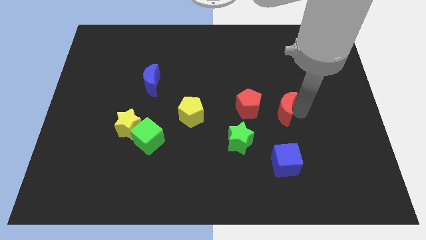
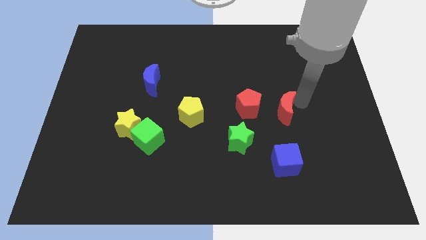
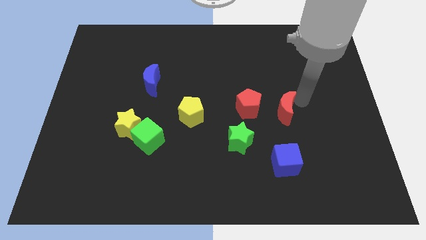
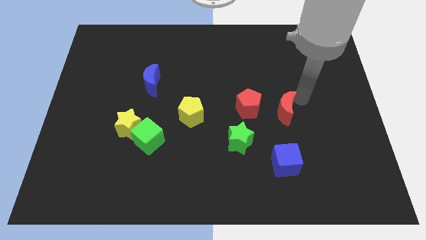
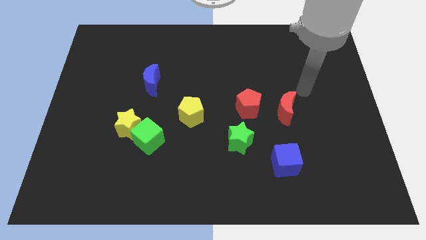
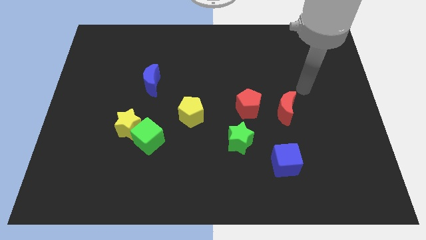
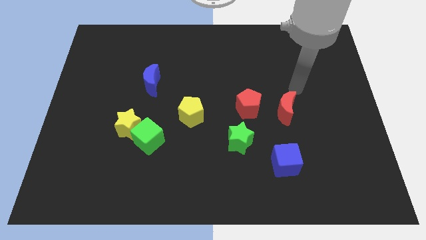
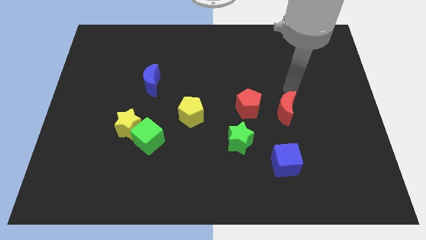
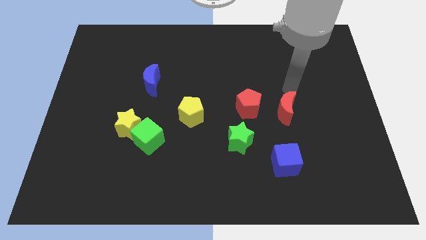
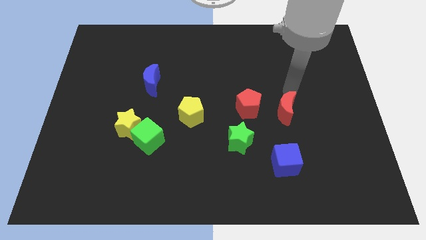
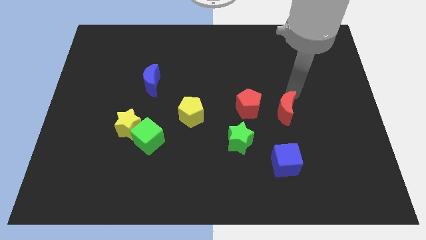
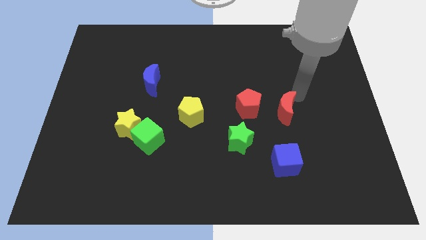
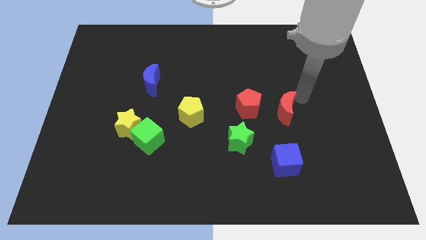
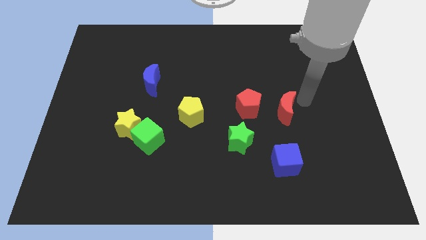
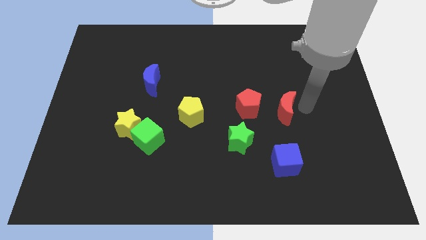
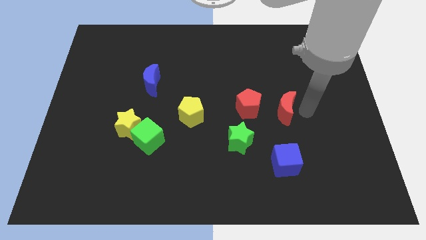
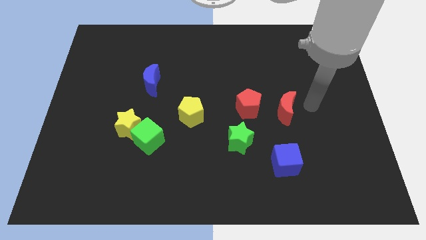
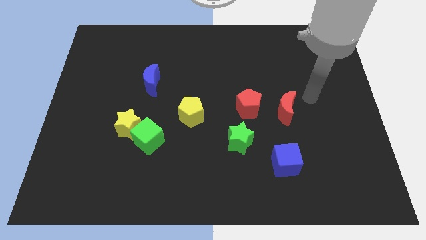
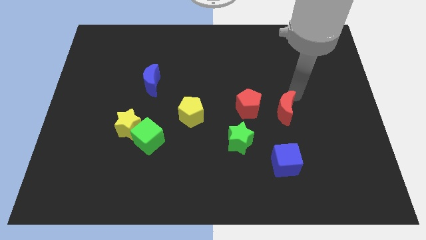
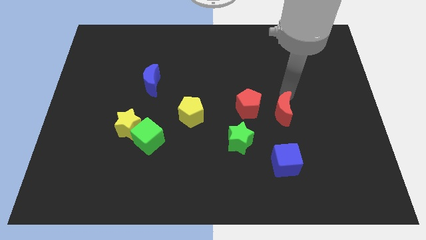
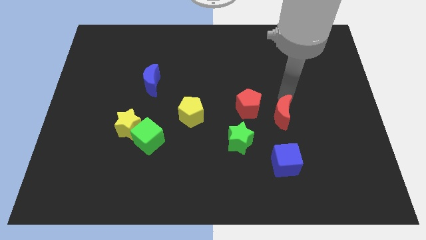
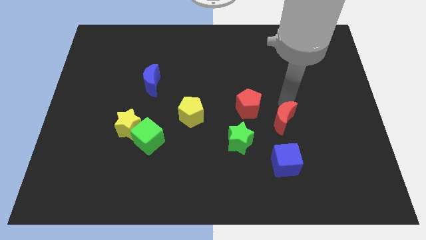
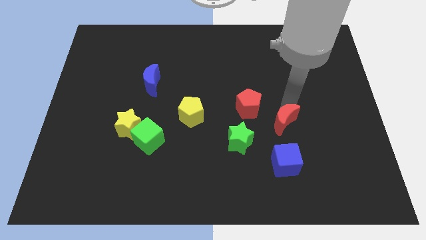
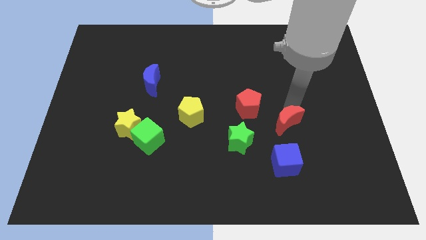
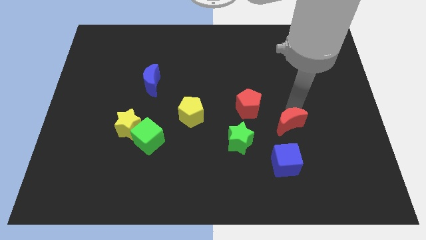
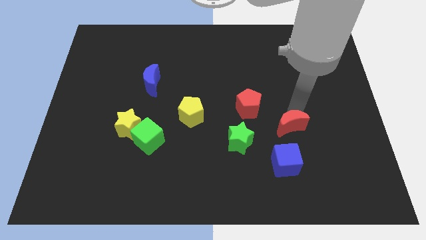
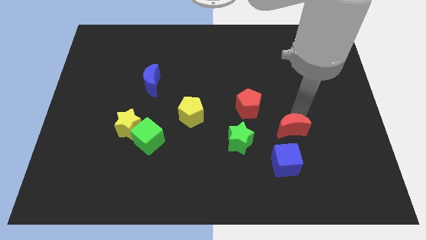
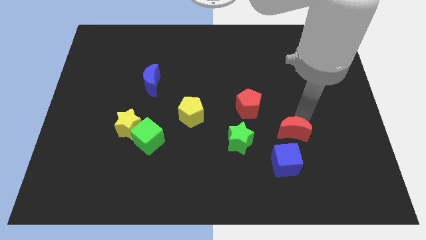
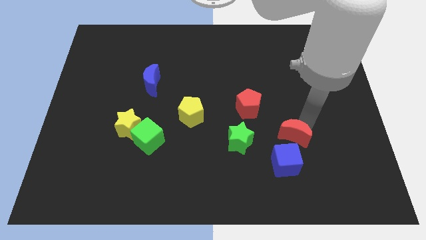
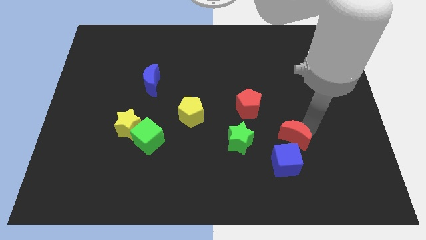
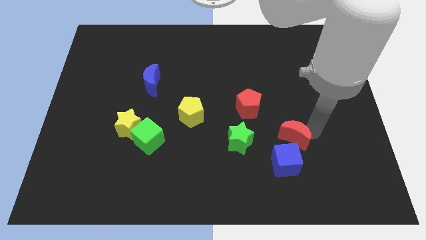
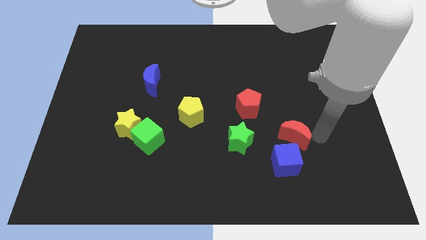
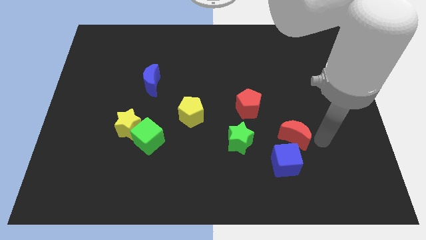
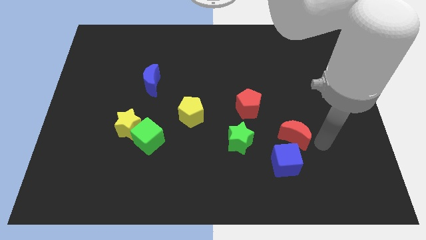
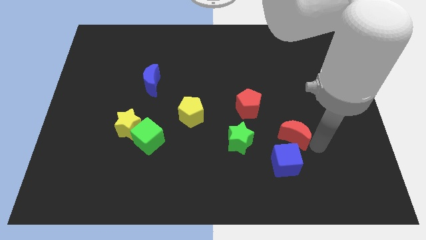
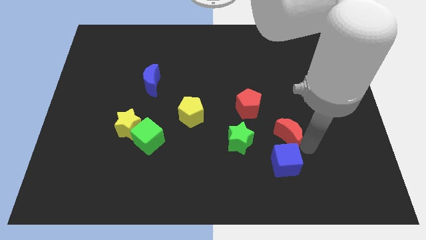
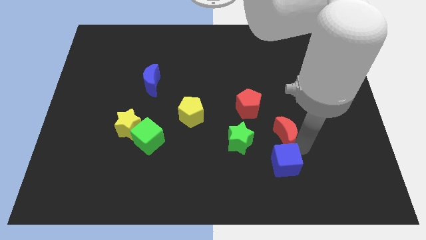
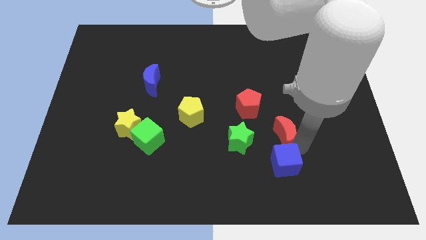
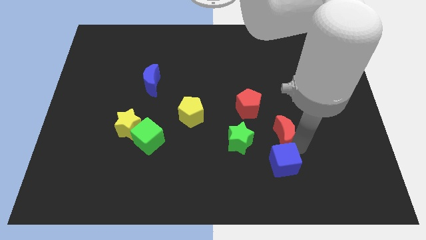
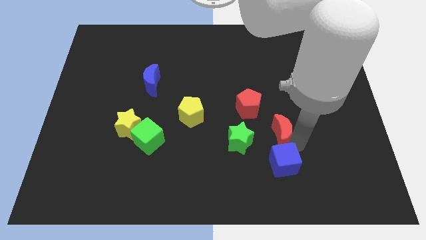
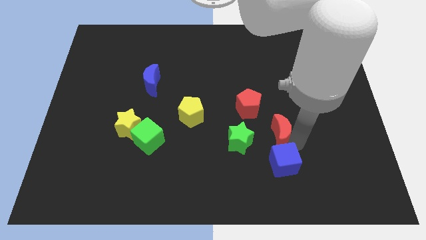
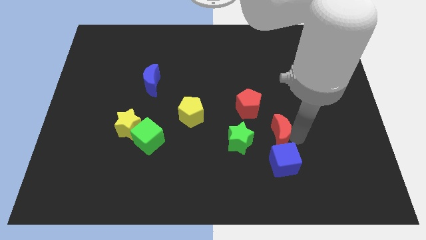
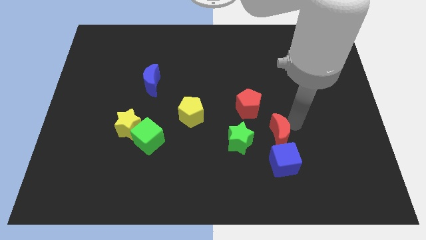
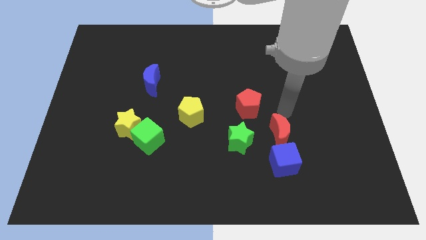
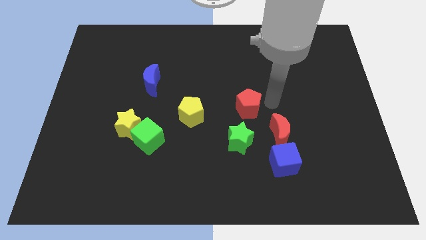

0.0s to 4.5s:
move the red moon right to the green star

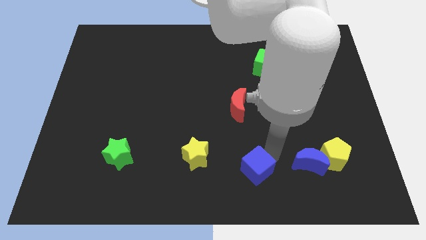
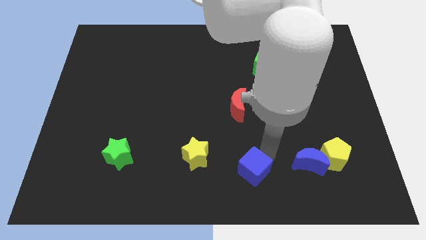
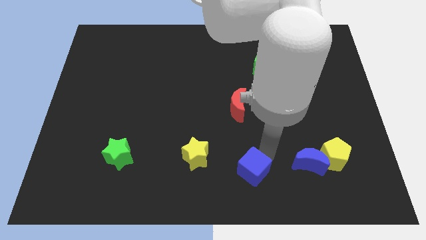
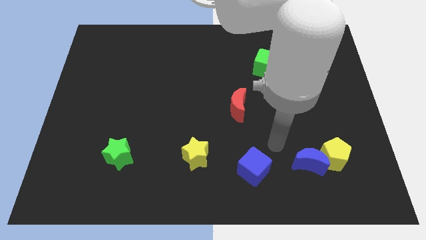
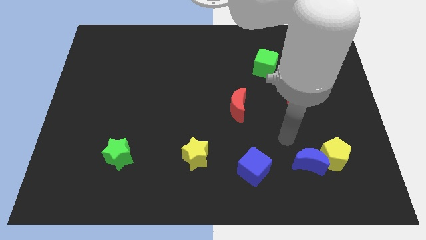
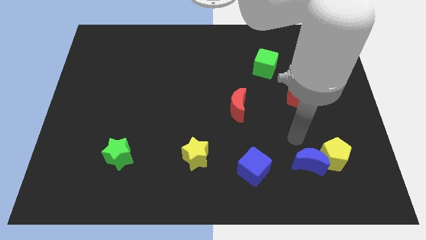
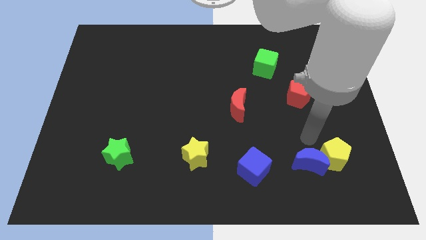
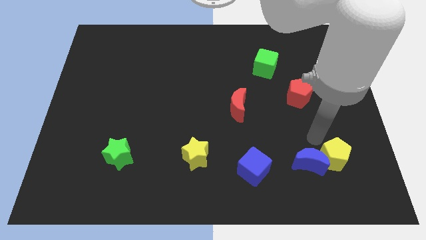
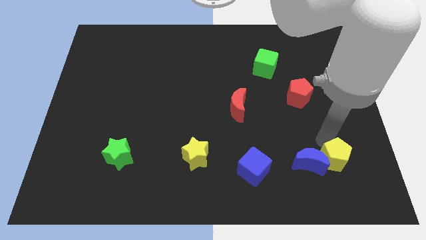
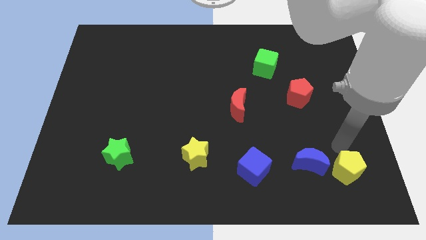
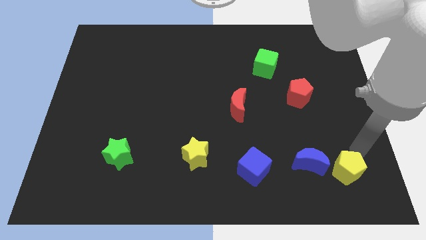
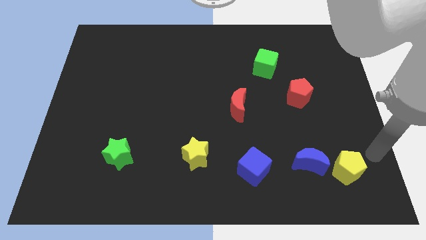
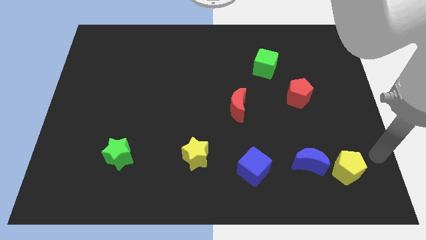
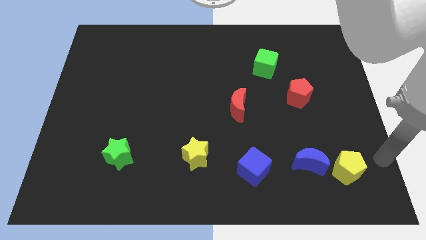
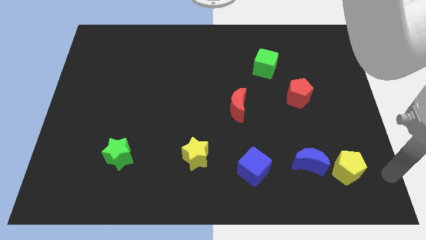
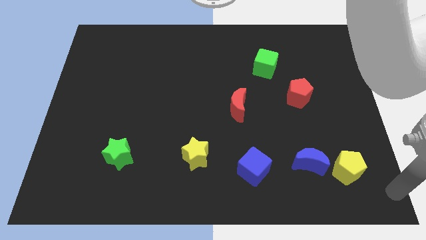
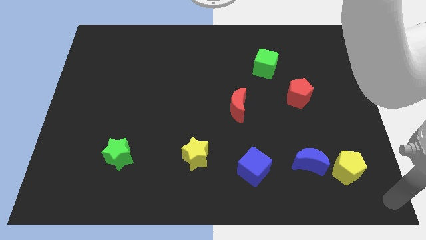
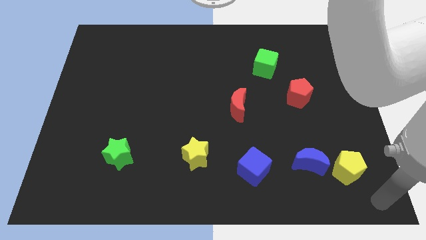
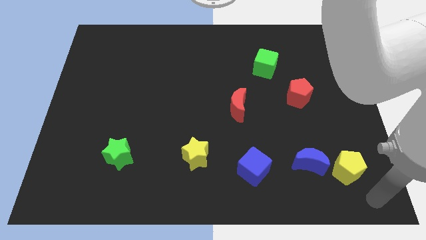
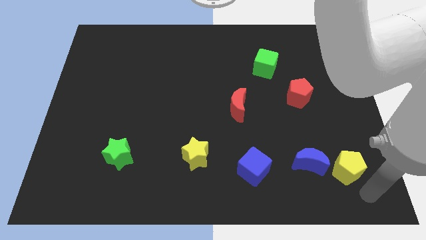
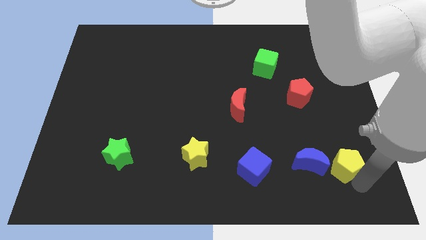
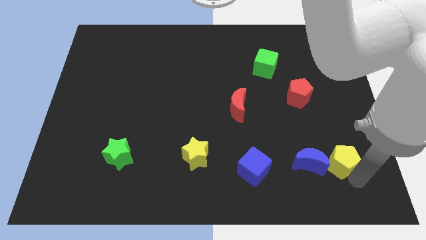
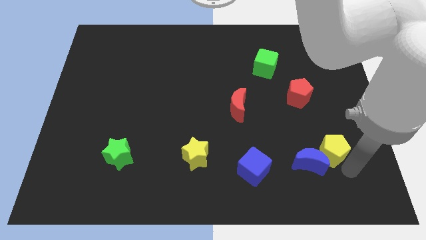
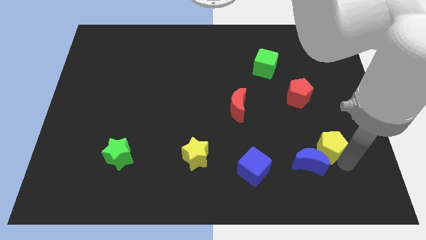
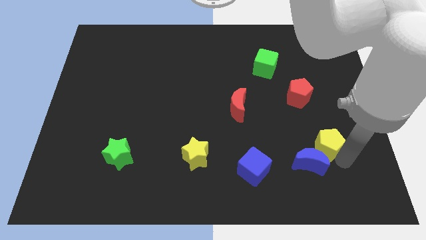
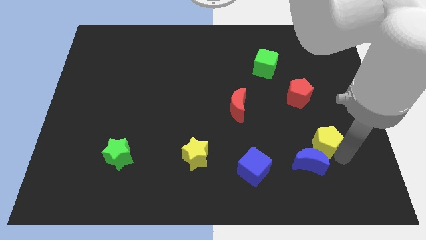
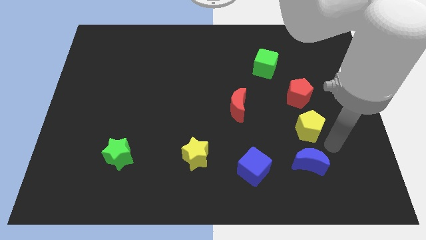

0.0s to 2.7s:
place the yellow pentagon in between the red pentagon and blue moon

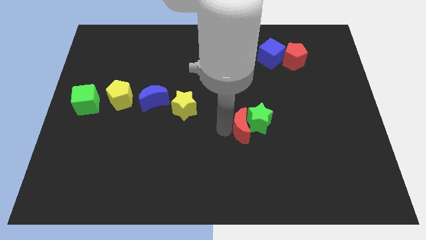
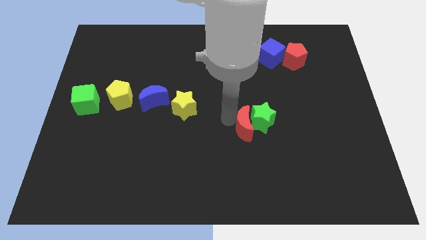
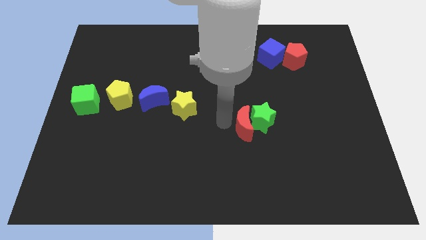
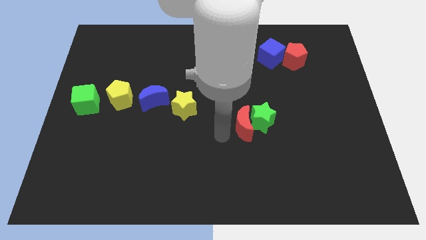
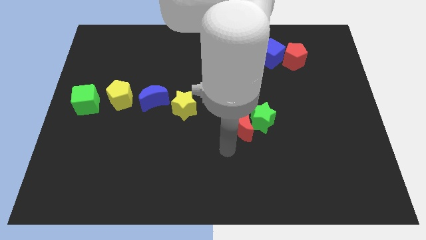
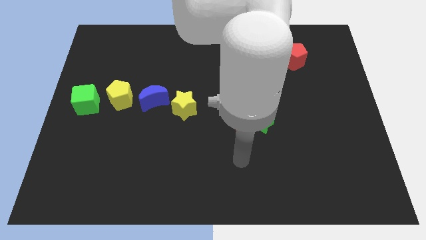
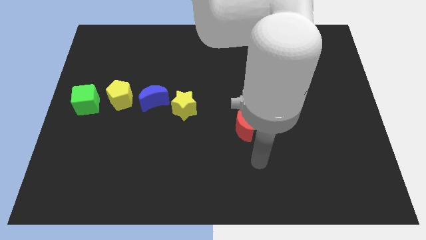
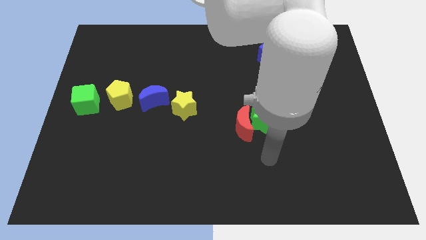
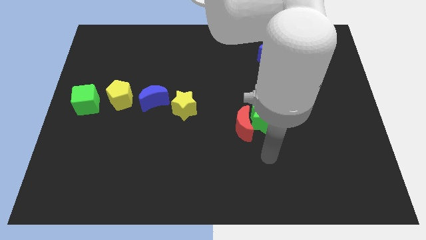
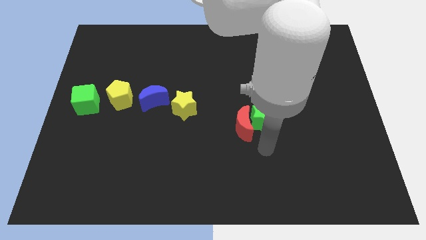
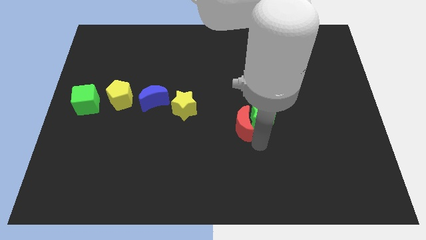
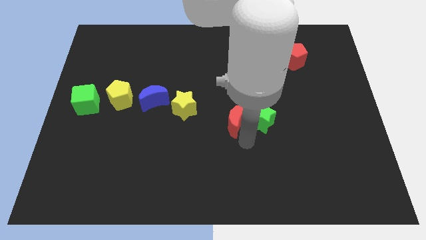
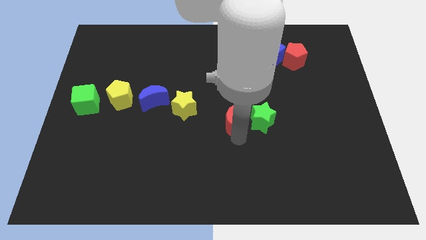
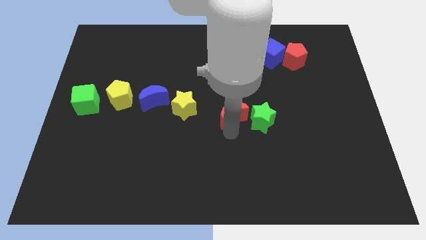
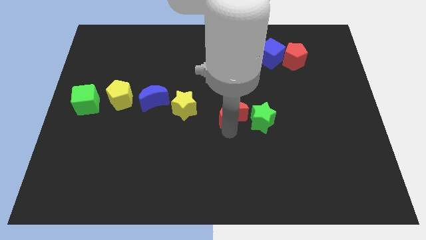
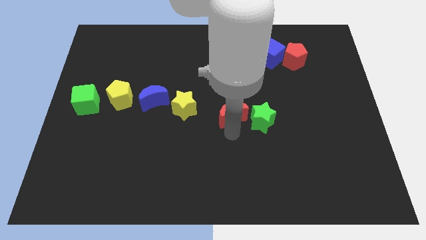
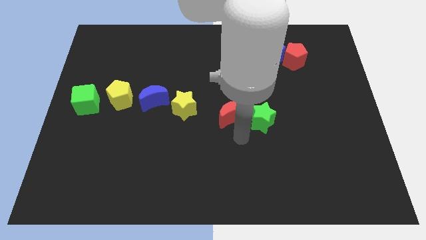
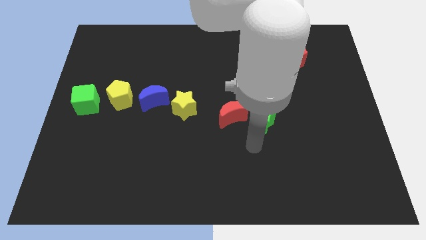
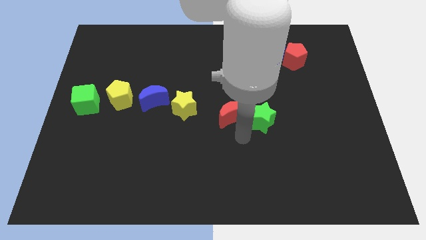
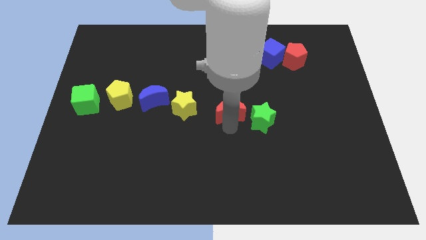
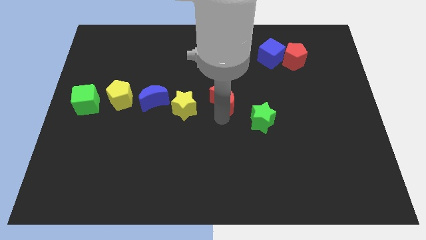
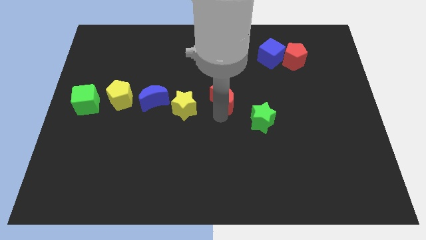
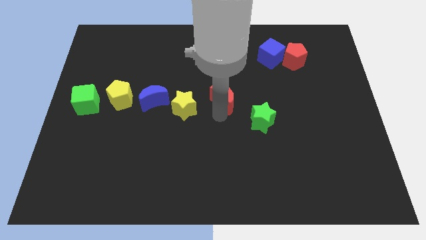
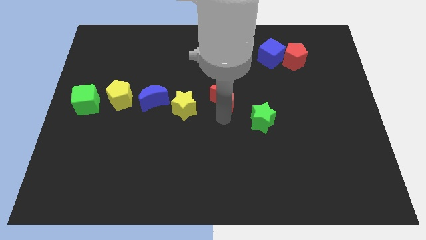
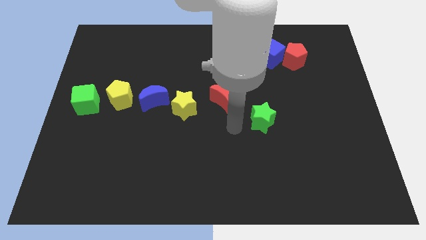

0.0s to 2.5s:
separate the red moon and the green star
